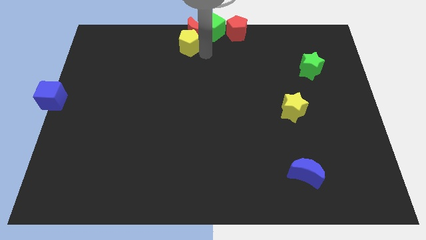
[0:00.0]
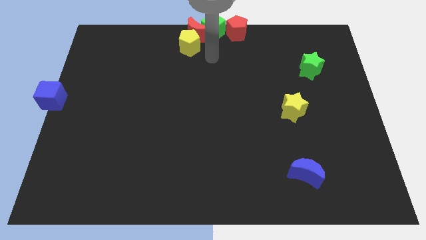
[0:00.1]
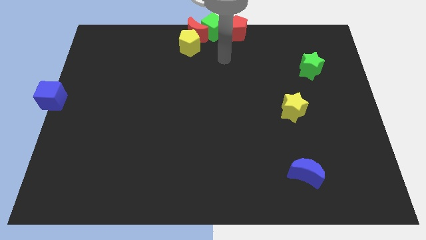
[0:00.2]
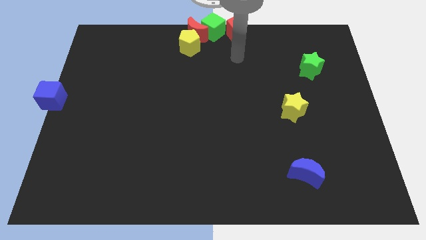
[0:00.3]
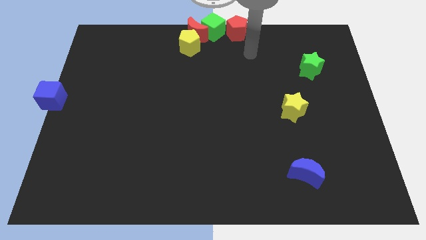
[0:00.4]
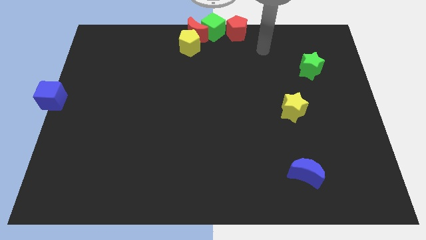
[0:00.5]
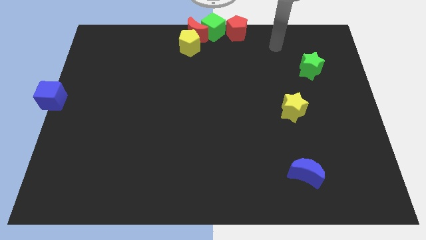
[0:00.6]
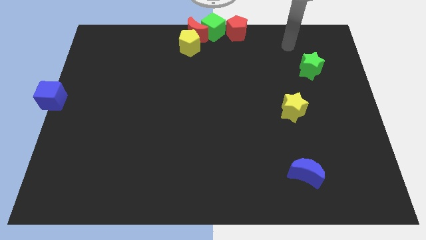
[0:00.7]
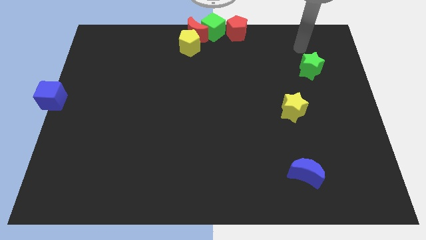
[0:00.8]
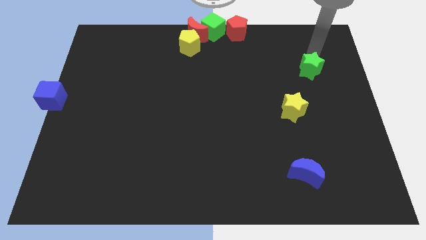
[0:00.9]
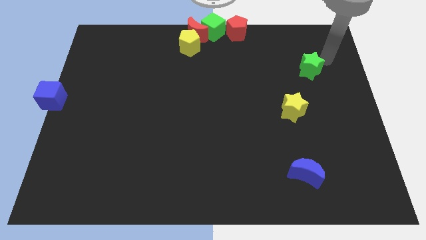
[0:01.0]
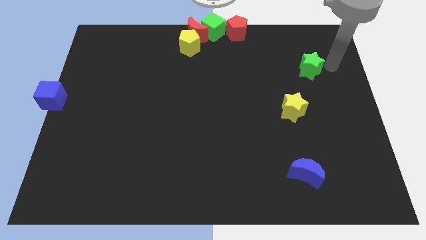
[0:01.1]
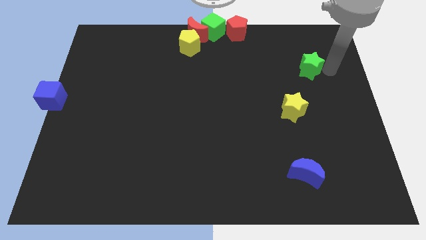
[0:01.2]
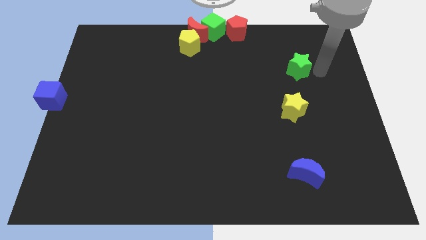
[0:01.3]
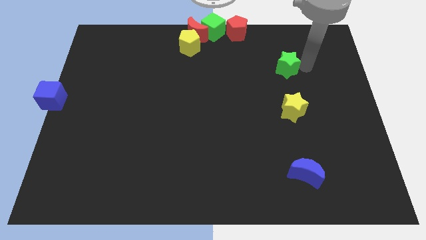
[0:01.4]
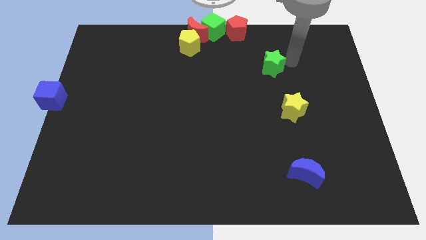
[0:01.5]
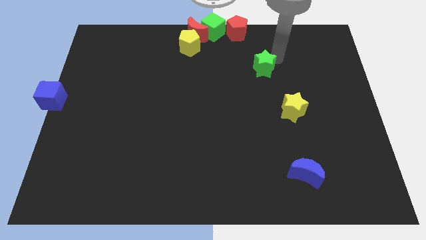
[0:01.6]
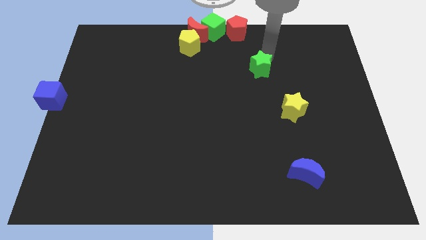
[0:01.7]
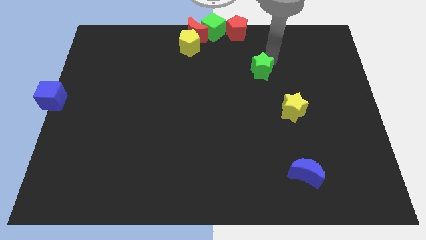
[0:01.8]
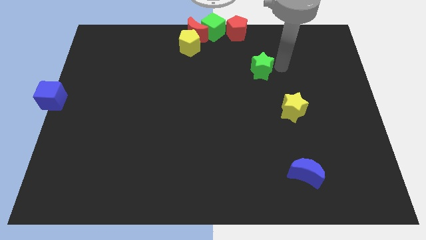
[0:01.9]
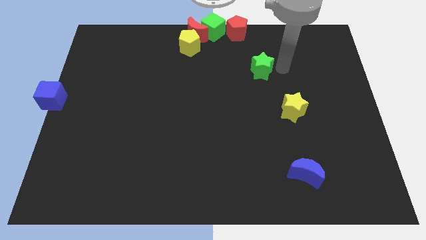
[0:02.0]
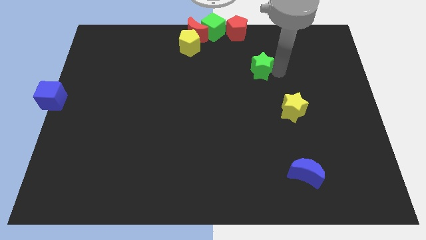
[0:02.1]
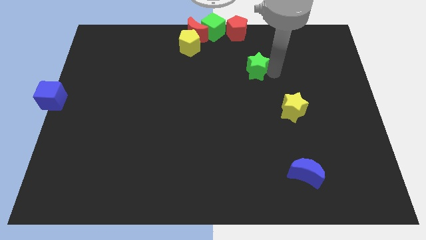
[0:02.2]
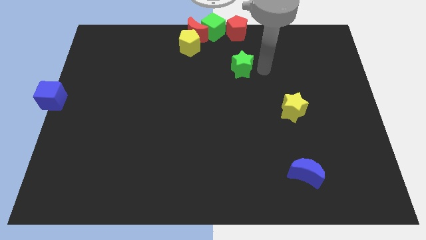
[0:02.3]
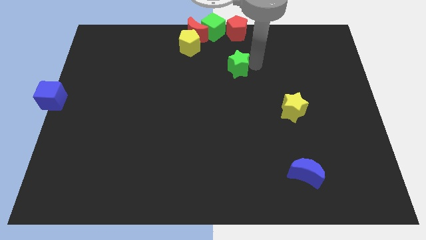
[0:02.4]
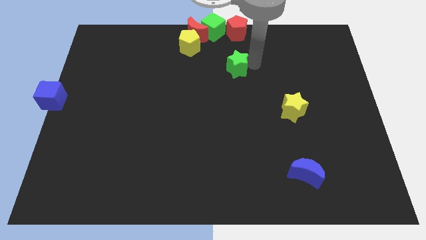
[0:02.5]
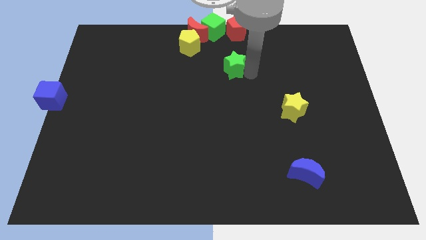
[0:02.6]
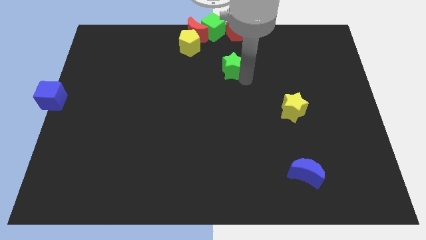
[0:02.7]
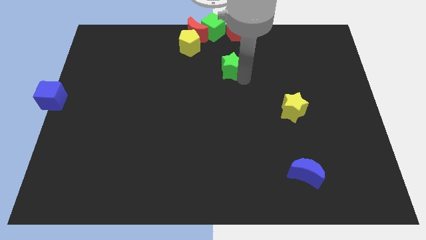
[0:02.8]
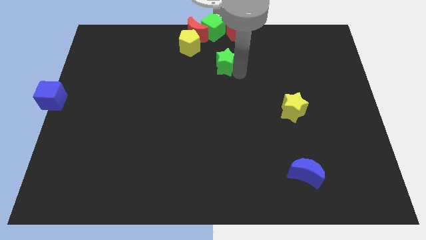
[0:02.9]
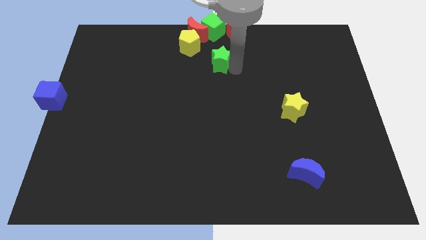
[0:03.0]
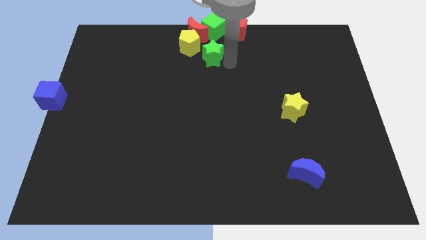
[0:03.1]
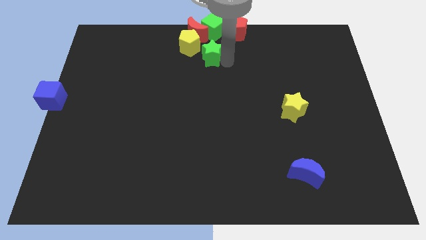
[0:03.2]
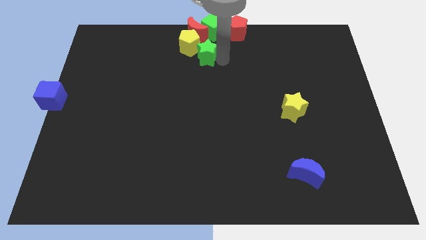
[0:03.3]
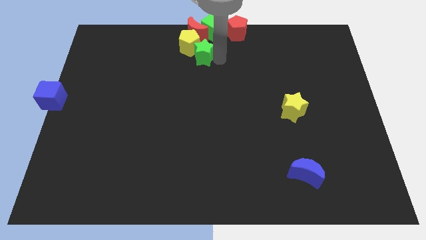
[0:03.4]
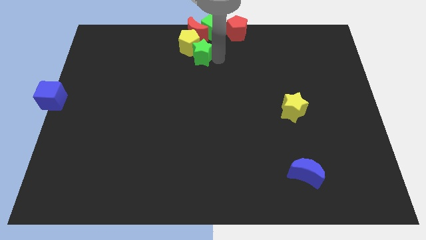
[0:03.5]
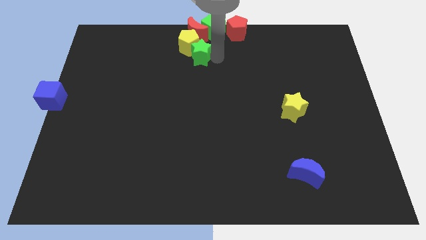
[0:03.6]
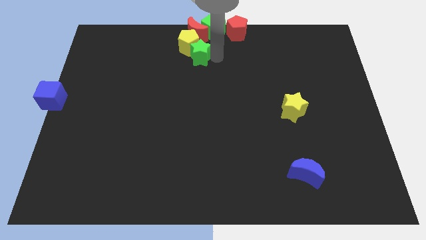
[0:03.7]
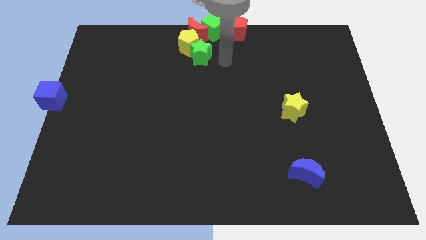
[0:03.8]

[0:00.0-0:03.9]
move the green star diagonal below yellow pentagon

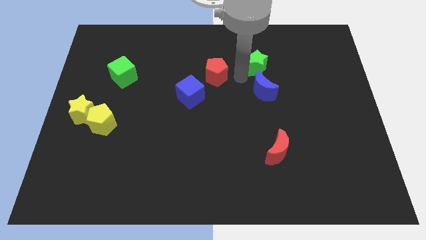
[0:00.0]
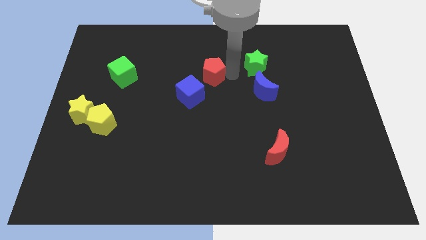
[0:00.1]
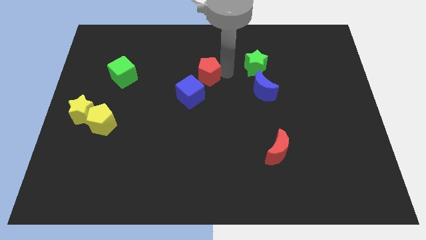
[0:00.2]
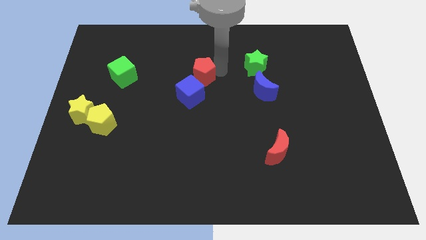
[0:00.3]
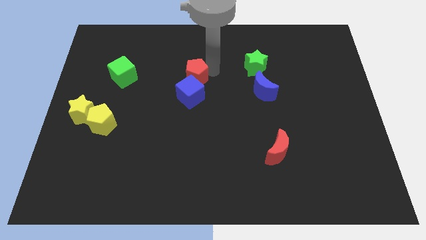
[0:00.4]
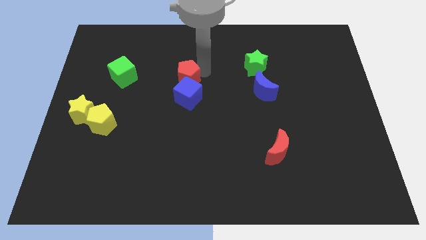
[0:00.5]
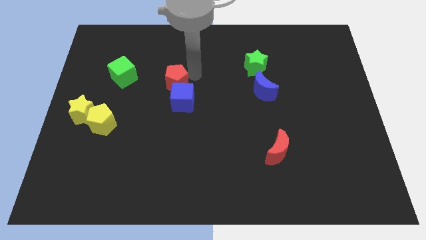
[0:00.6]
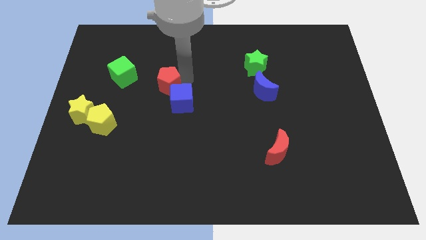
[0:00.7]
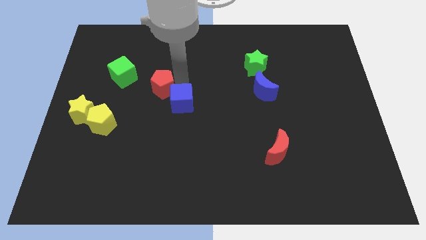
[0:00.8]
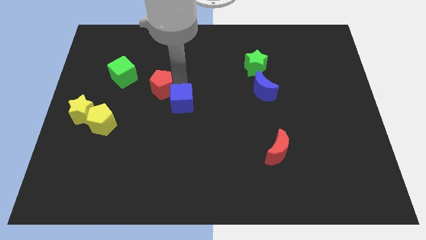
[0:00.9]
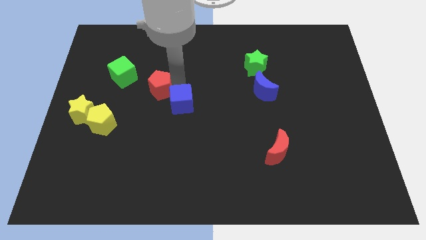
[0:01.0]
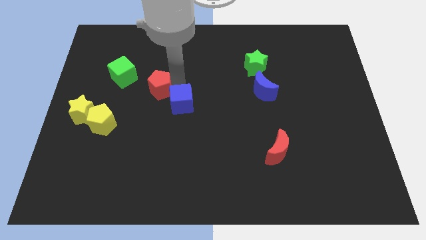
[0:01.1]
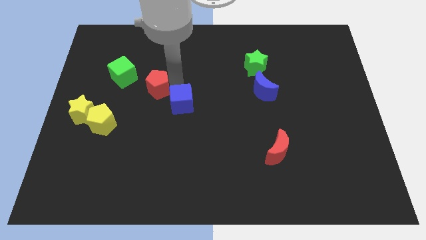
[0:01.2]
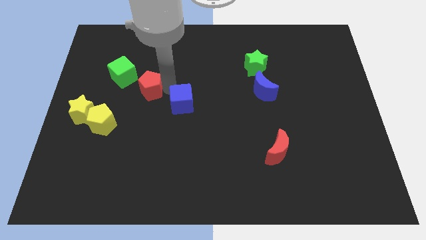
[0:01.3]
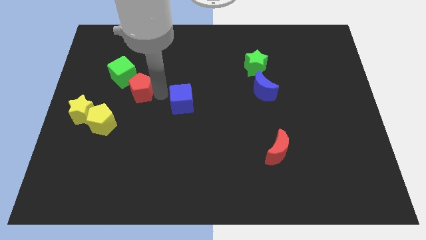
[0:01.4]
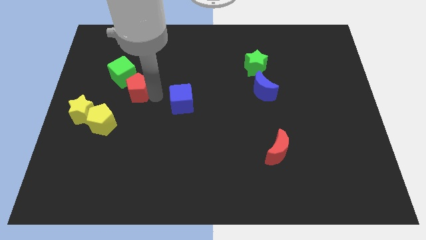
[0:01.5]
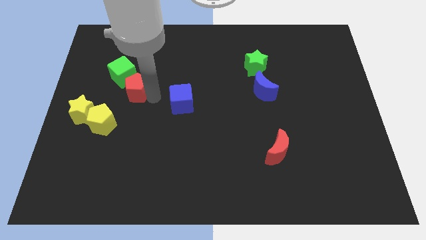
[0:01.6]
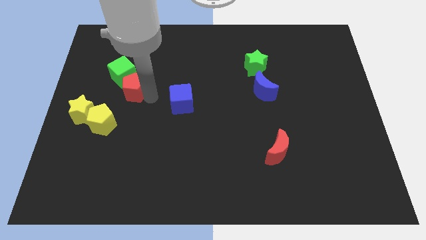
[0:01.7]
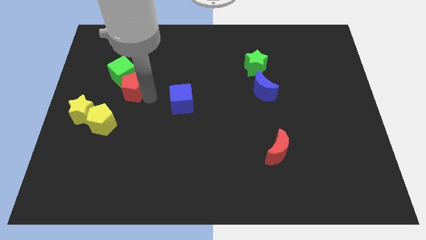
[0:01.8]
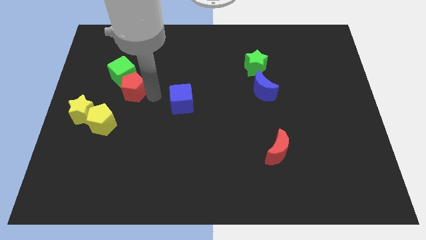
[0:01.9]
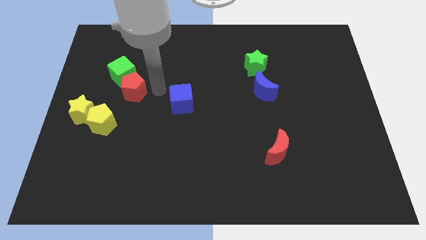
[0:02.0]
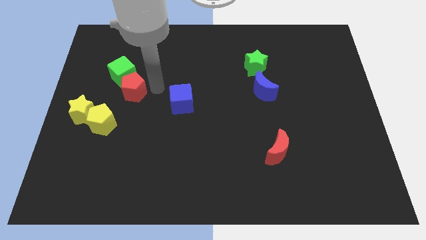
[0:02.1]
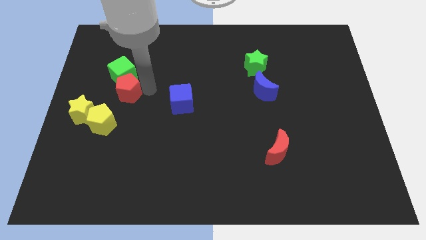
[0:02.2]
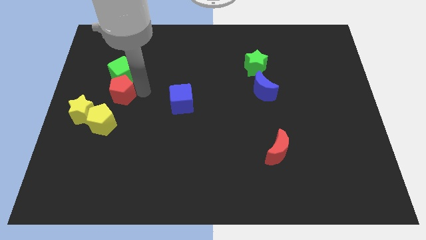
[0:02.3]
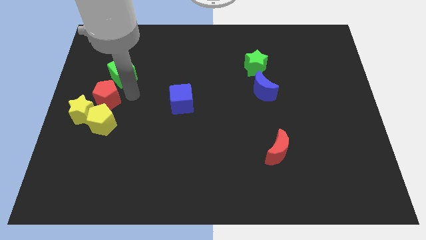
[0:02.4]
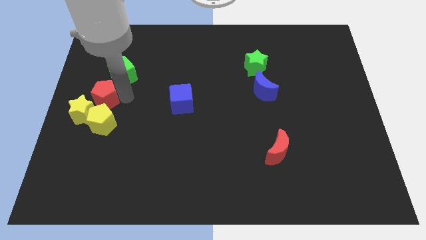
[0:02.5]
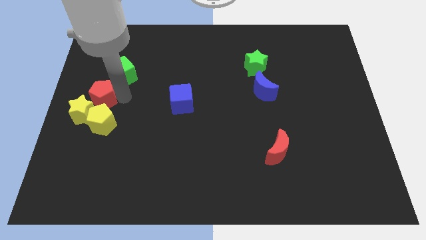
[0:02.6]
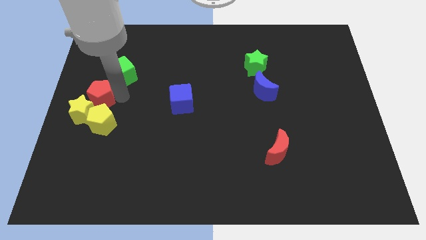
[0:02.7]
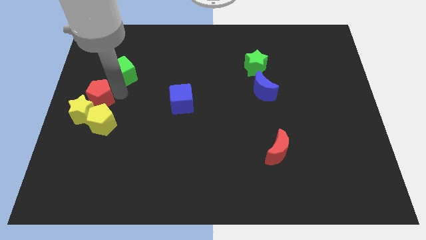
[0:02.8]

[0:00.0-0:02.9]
slightly push the blue cube with red pentagon

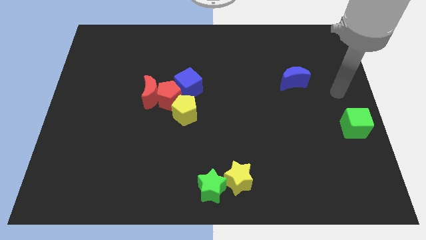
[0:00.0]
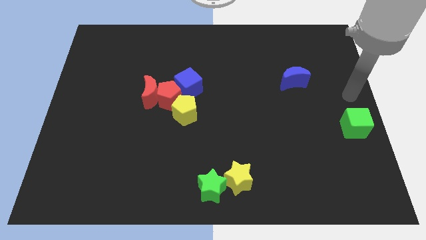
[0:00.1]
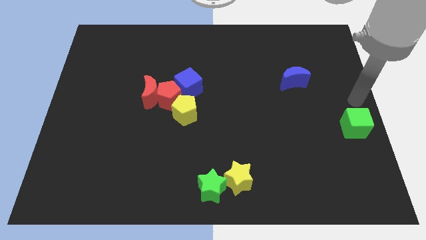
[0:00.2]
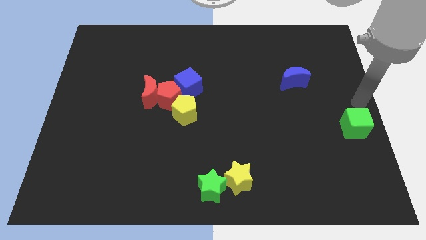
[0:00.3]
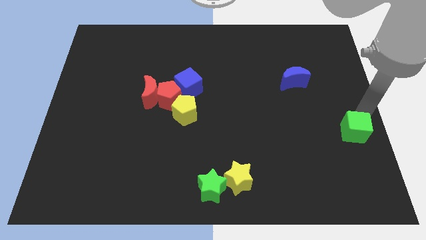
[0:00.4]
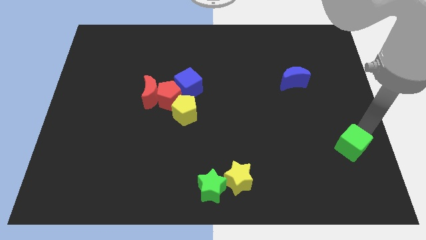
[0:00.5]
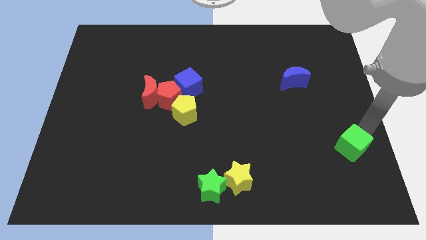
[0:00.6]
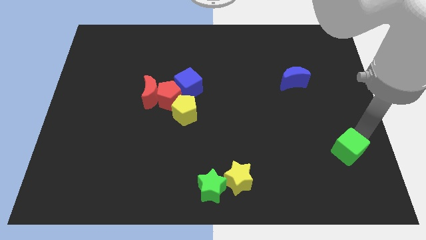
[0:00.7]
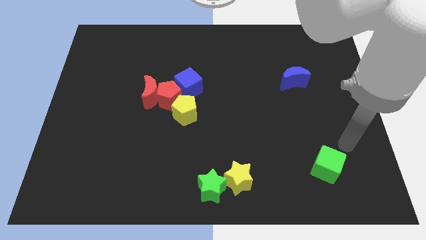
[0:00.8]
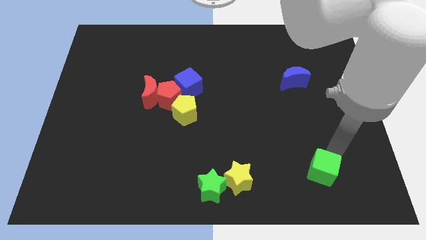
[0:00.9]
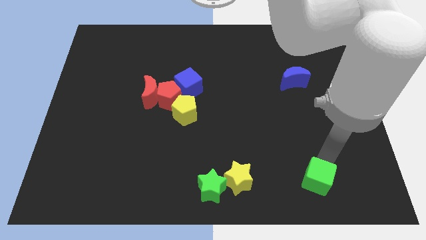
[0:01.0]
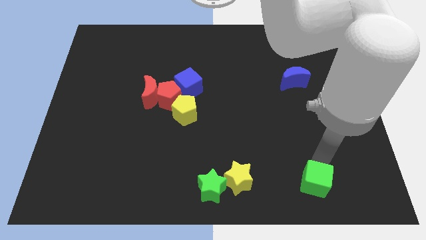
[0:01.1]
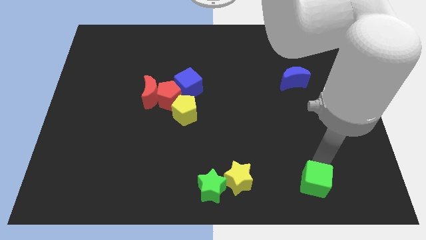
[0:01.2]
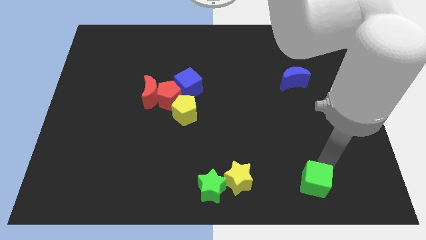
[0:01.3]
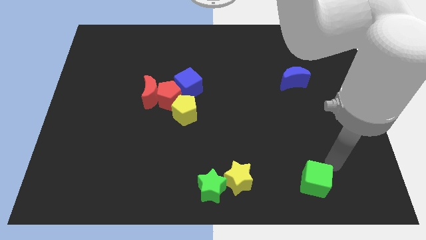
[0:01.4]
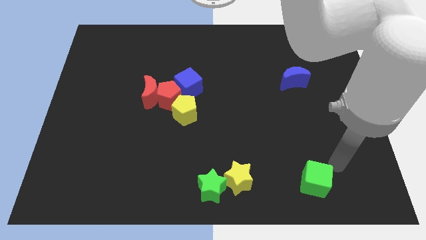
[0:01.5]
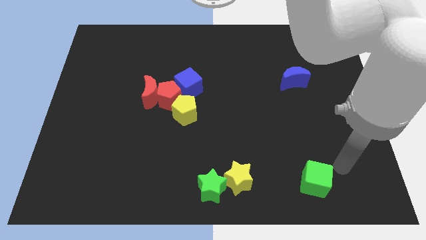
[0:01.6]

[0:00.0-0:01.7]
move the green cube to the right of yellow star

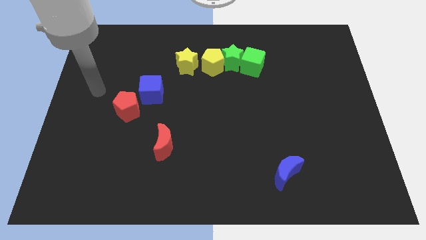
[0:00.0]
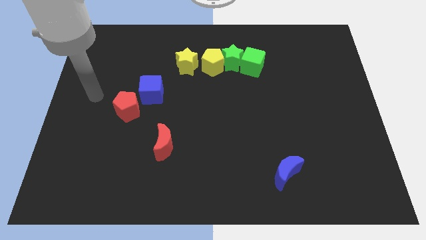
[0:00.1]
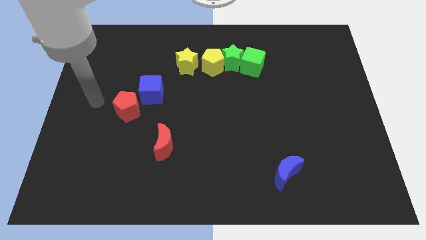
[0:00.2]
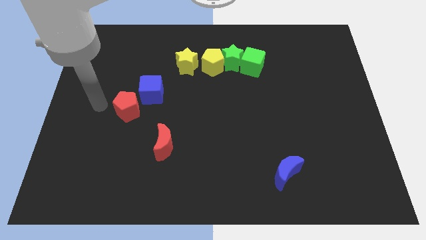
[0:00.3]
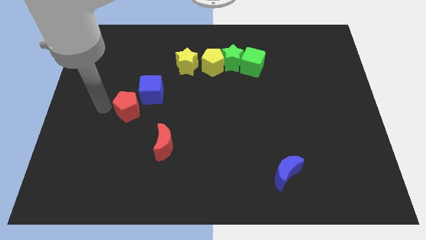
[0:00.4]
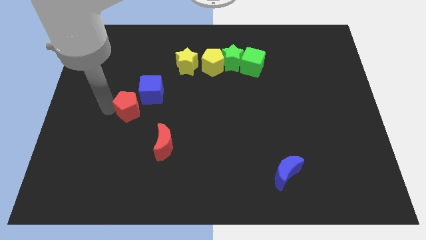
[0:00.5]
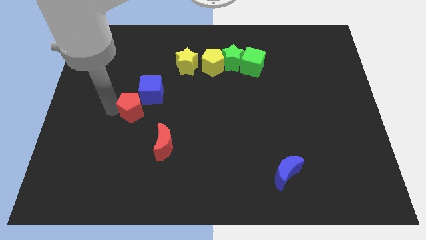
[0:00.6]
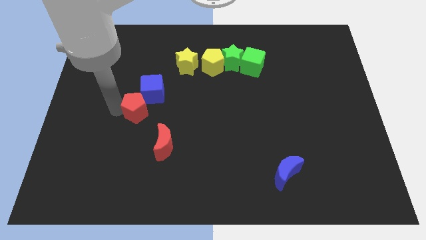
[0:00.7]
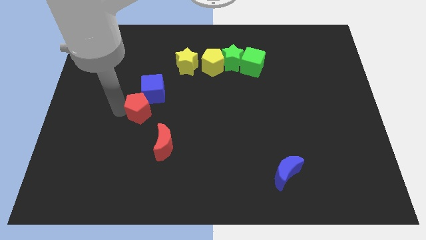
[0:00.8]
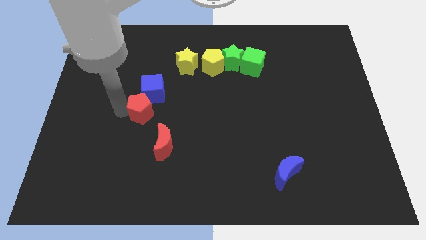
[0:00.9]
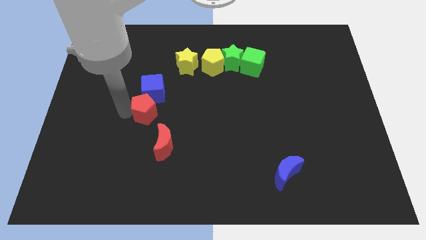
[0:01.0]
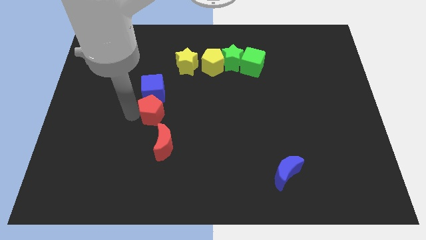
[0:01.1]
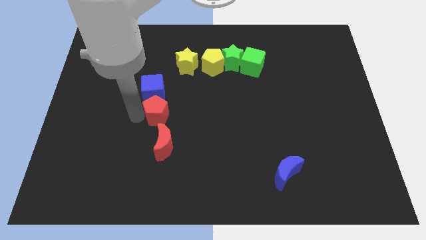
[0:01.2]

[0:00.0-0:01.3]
push the red pentagon to the bottom side of the blue cube
